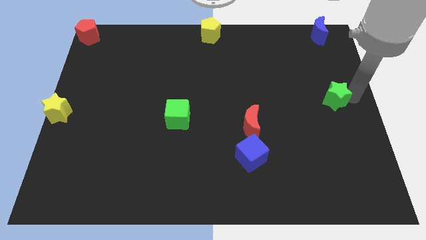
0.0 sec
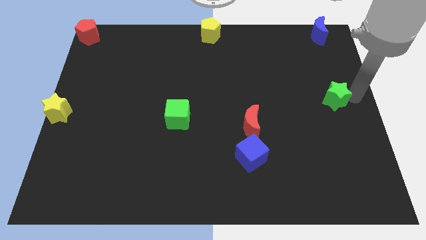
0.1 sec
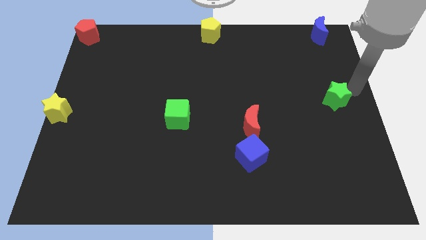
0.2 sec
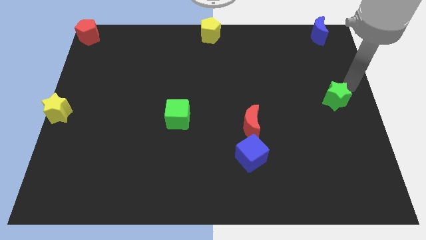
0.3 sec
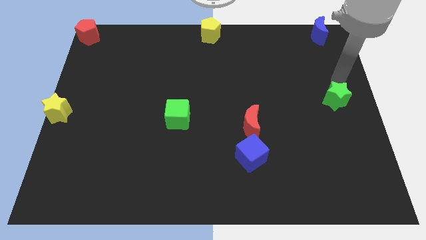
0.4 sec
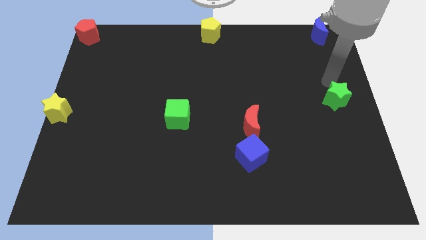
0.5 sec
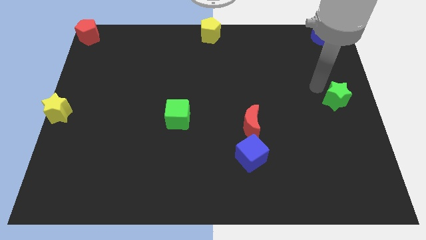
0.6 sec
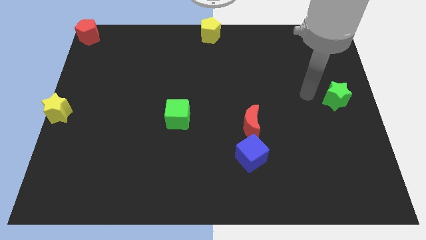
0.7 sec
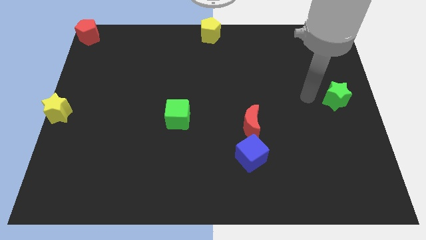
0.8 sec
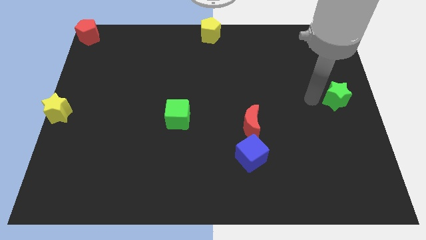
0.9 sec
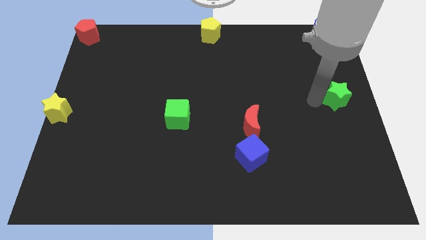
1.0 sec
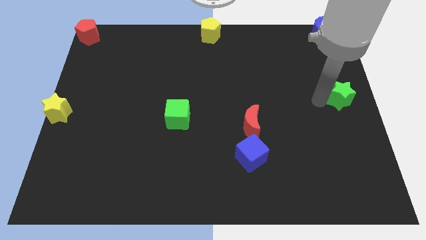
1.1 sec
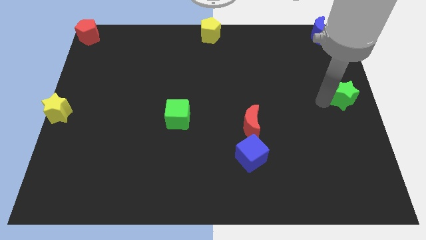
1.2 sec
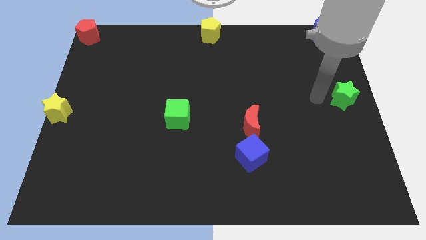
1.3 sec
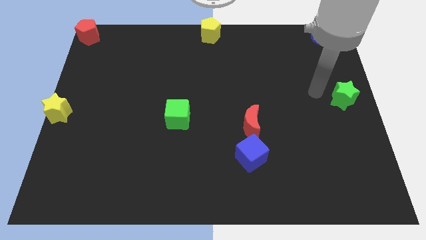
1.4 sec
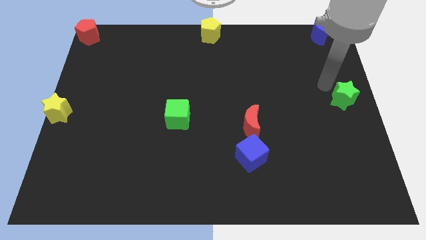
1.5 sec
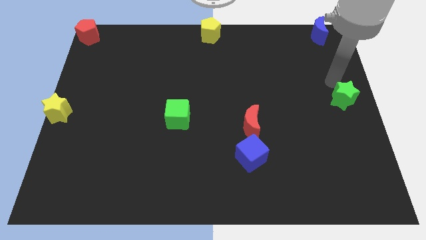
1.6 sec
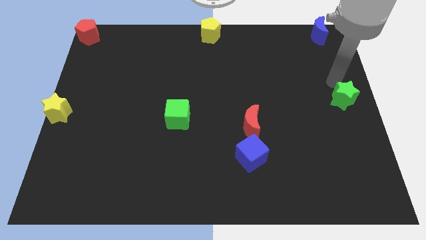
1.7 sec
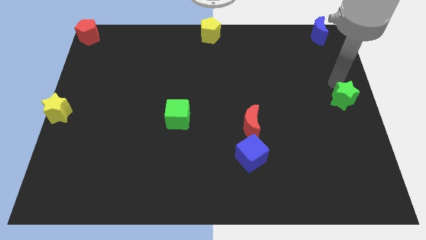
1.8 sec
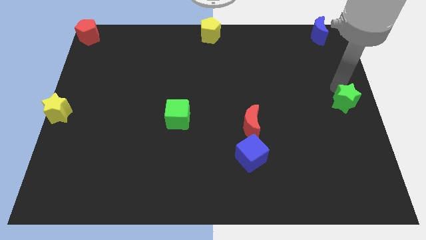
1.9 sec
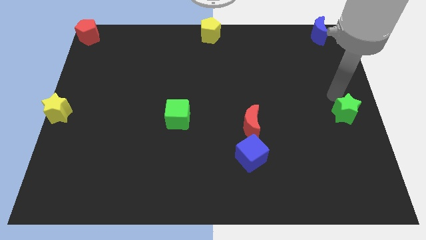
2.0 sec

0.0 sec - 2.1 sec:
move green star at the center right

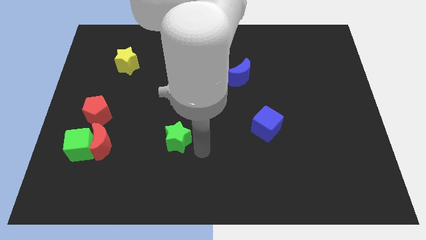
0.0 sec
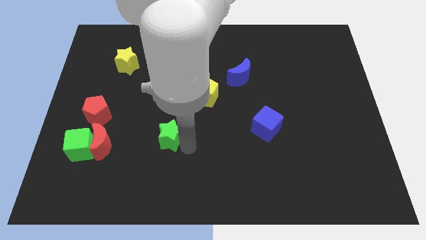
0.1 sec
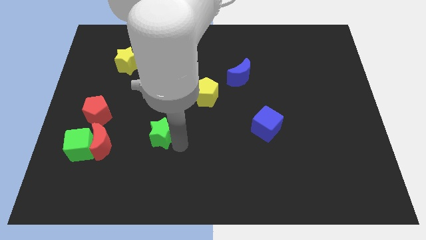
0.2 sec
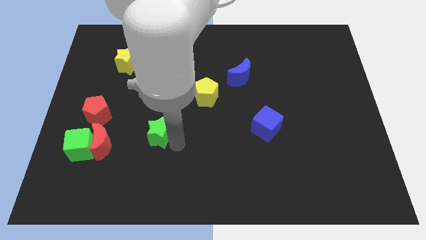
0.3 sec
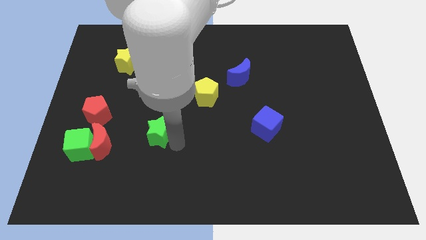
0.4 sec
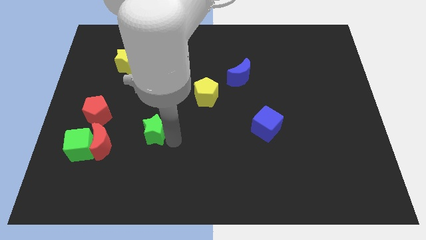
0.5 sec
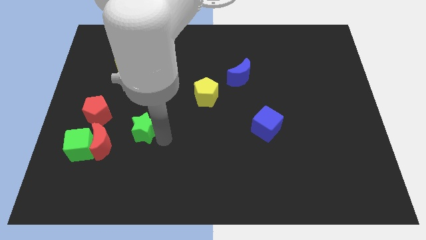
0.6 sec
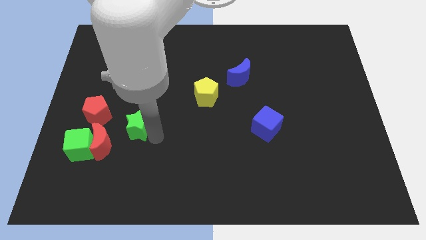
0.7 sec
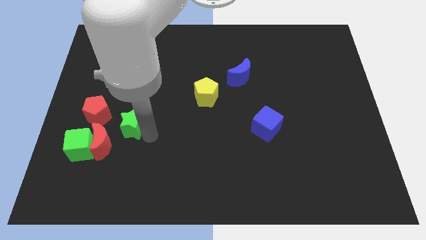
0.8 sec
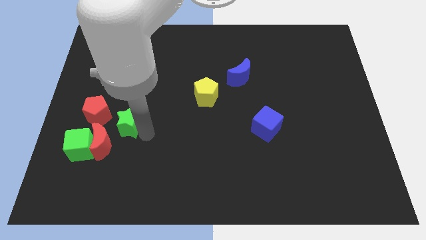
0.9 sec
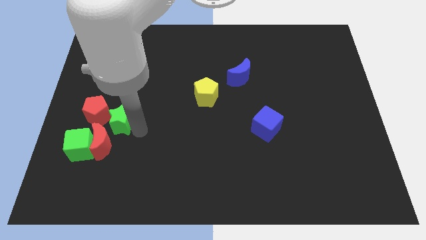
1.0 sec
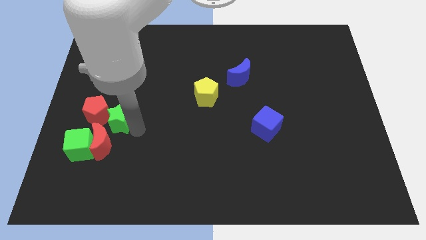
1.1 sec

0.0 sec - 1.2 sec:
move green star into the red pentagon

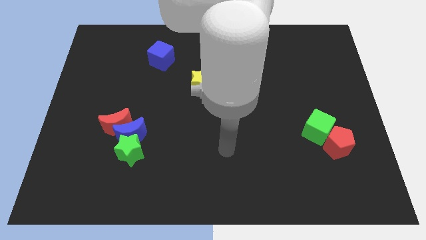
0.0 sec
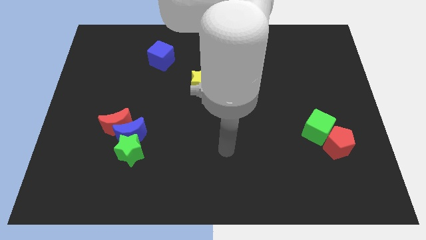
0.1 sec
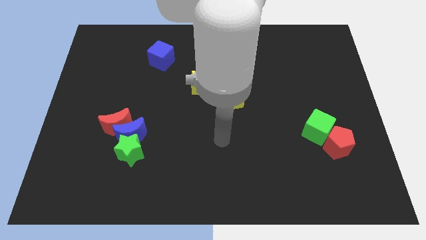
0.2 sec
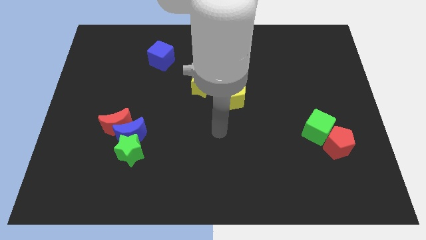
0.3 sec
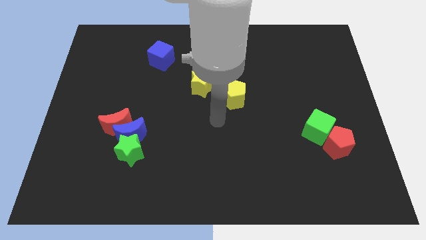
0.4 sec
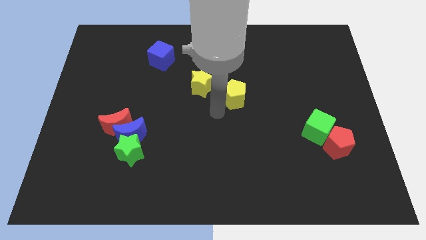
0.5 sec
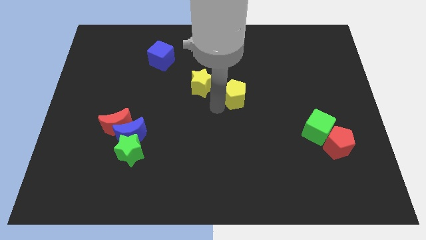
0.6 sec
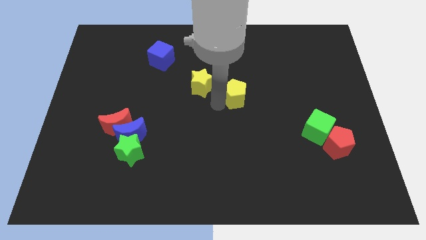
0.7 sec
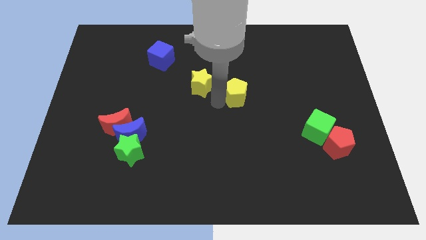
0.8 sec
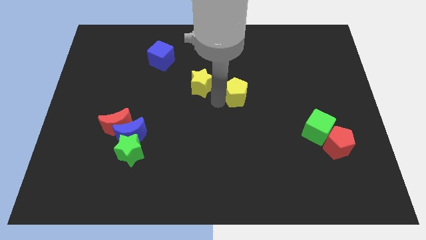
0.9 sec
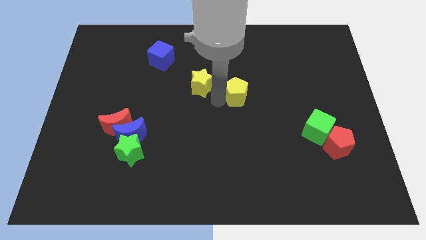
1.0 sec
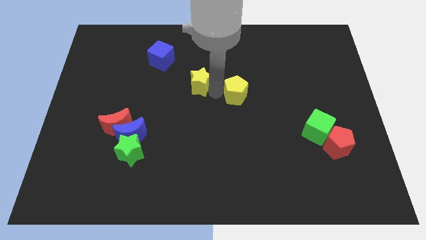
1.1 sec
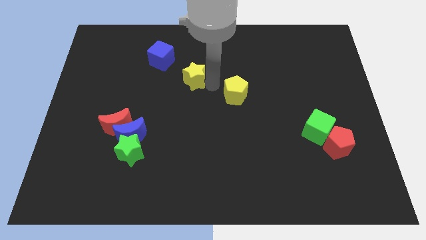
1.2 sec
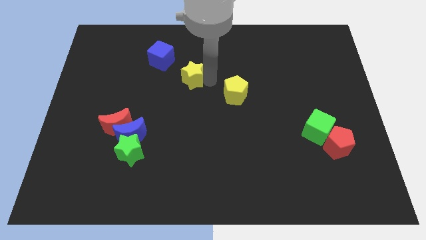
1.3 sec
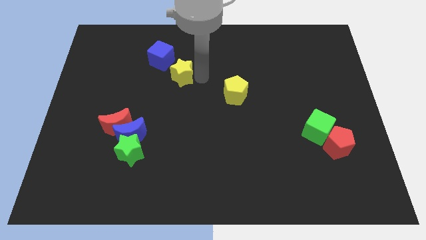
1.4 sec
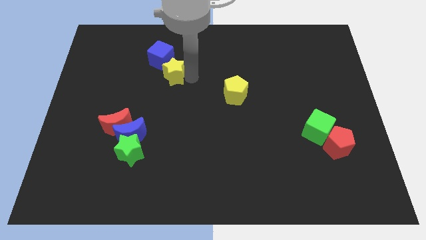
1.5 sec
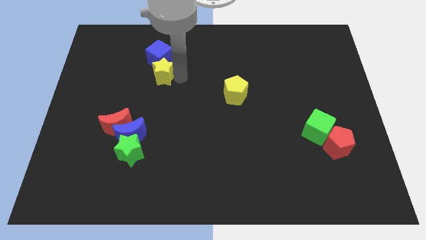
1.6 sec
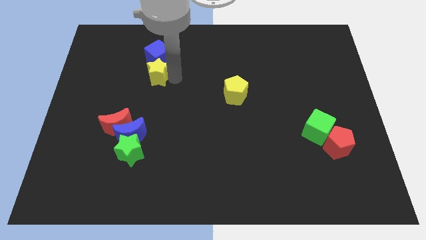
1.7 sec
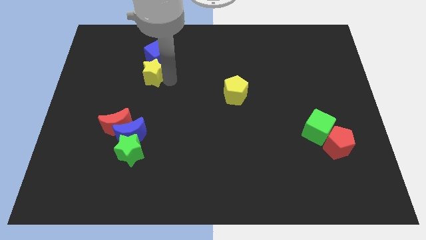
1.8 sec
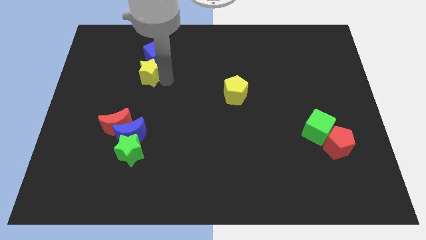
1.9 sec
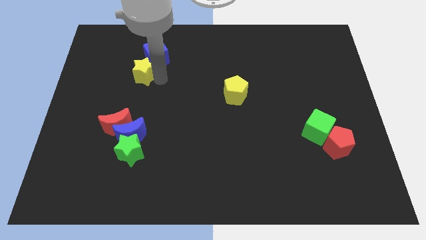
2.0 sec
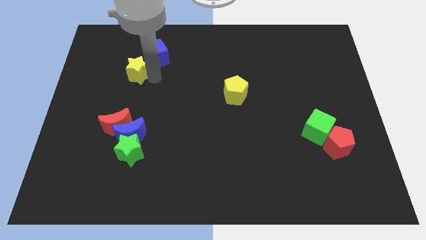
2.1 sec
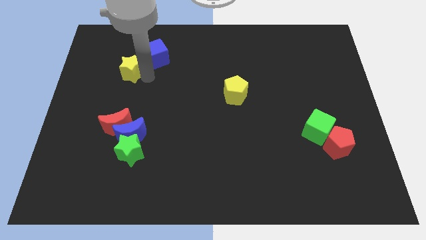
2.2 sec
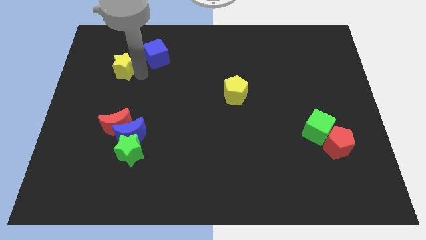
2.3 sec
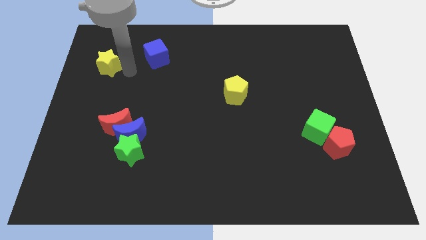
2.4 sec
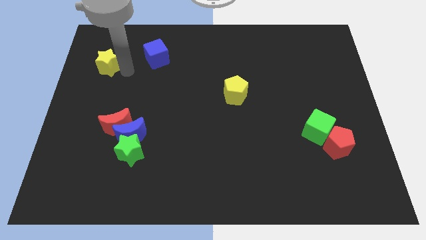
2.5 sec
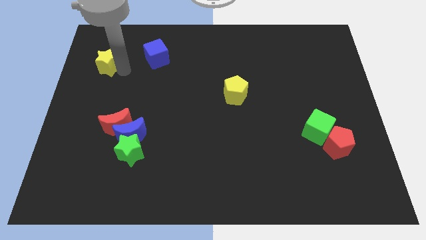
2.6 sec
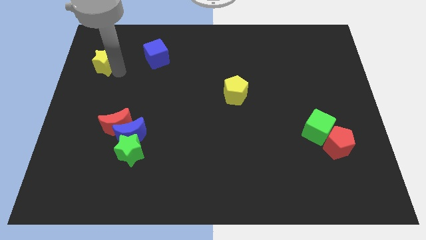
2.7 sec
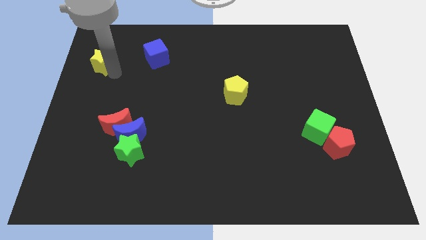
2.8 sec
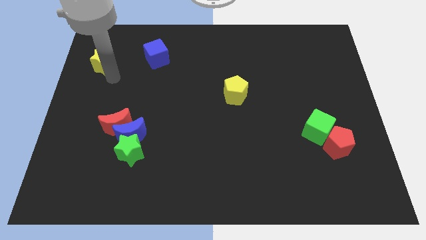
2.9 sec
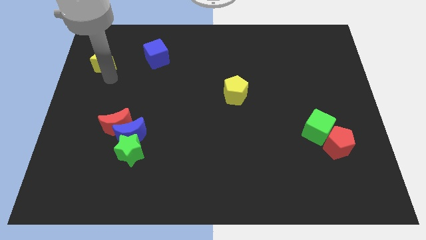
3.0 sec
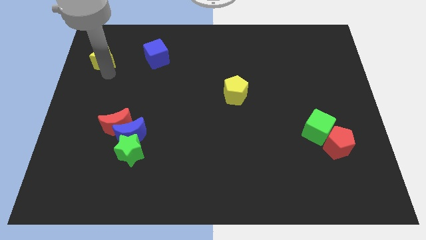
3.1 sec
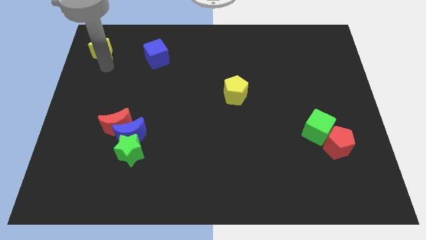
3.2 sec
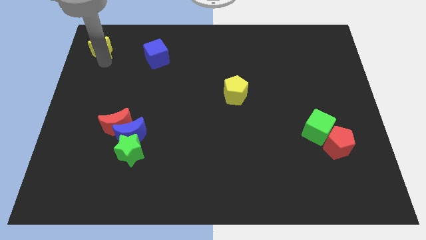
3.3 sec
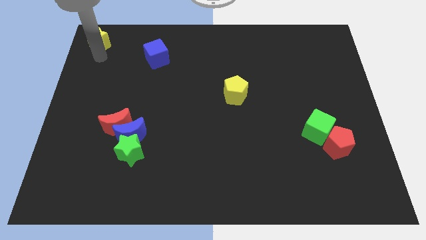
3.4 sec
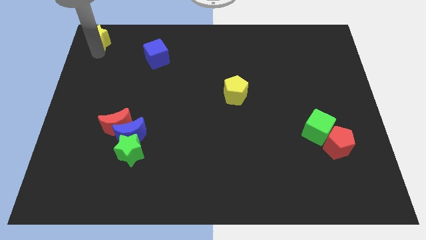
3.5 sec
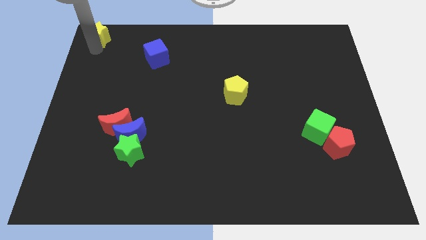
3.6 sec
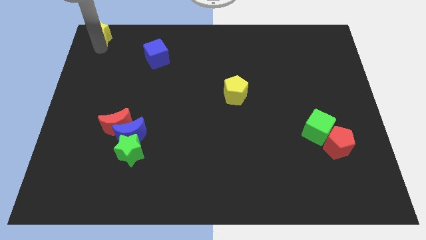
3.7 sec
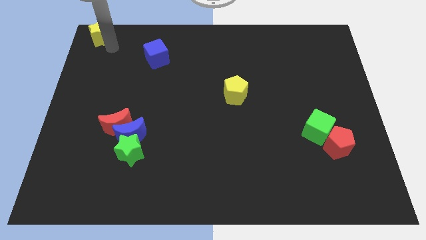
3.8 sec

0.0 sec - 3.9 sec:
move the yellow star to the top left

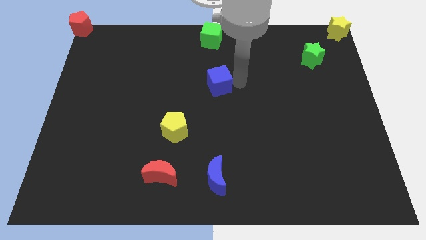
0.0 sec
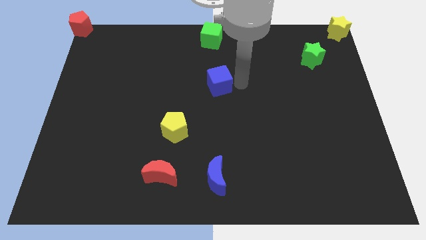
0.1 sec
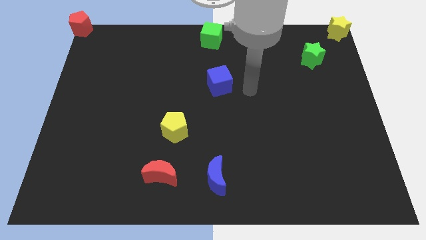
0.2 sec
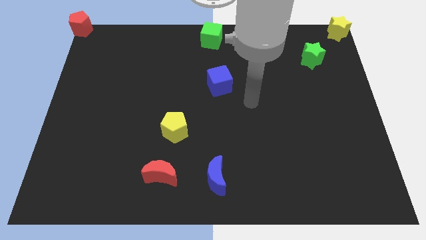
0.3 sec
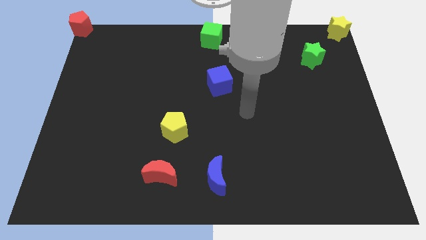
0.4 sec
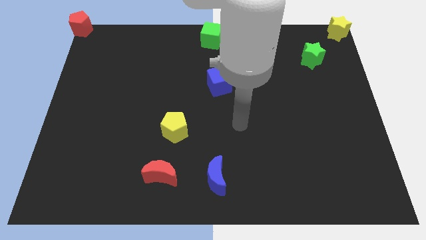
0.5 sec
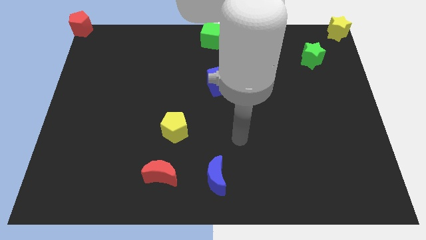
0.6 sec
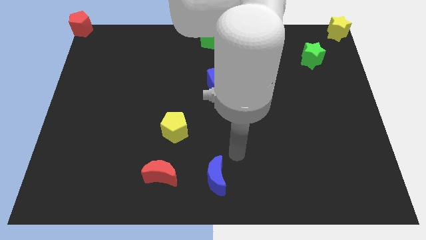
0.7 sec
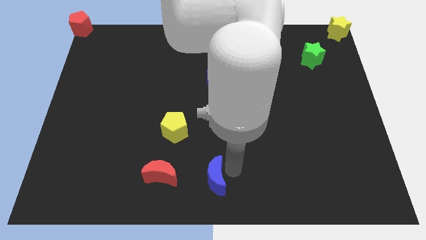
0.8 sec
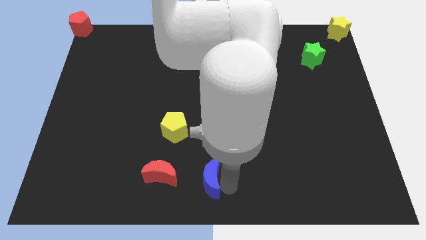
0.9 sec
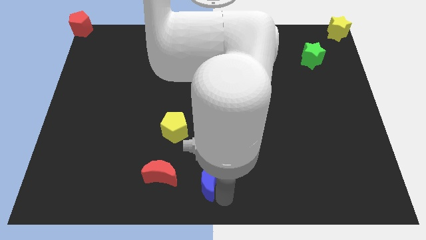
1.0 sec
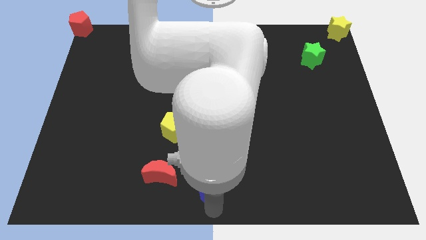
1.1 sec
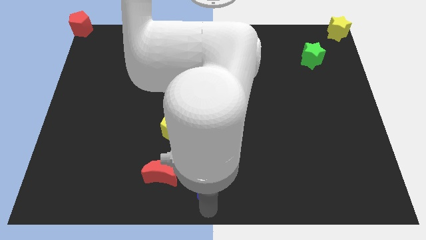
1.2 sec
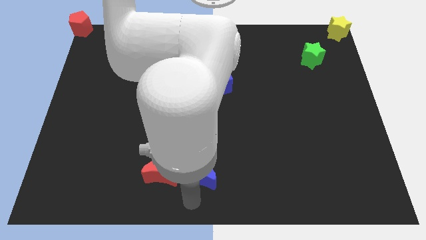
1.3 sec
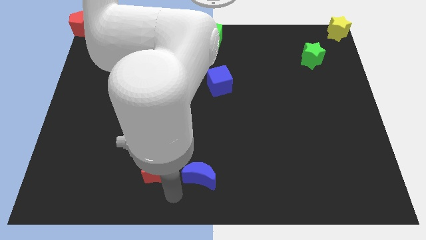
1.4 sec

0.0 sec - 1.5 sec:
push the blue crescent slightly to the left side

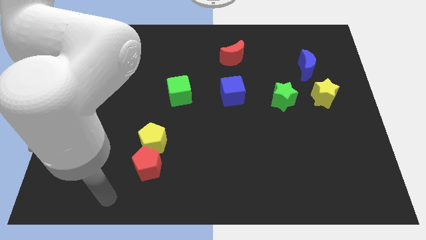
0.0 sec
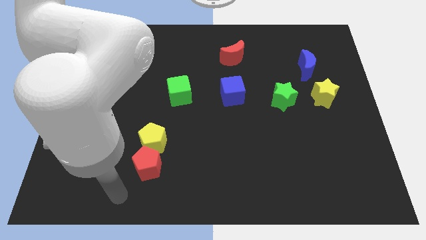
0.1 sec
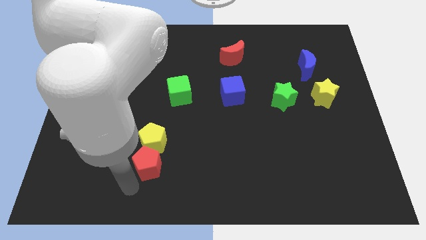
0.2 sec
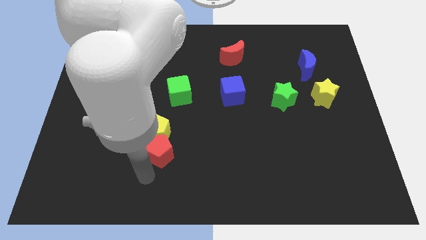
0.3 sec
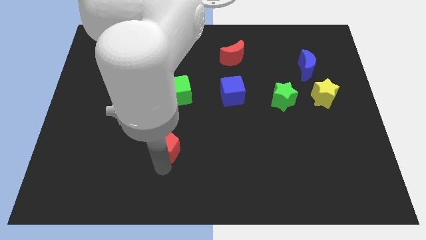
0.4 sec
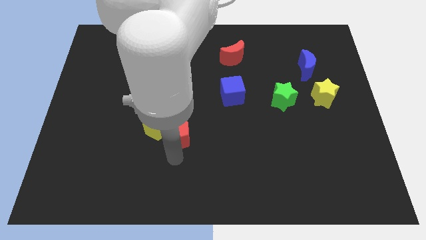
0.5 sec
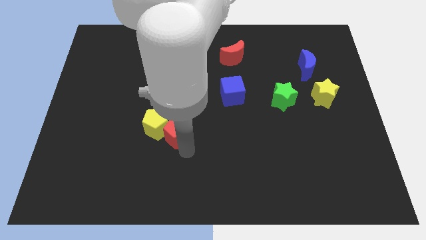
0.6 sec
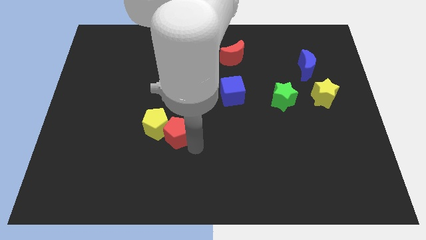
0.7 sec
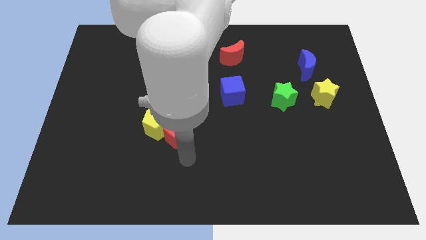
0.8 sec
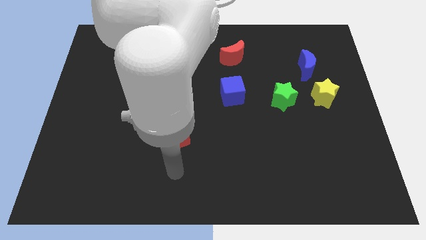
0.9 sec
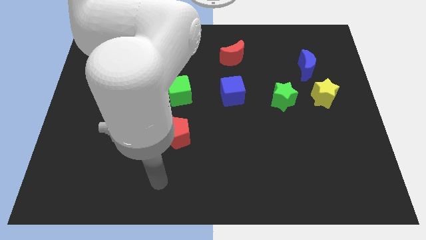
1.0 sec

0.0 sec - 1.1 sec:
move red pentagon diagonally below the yellow pentagon
